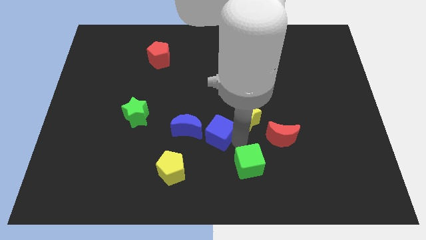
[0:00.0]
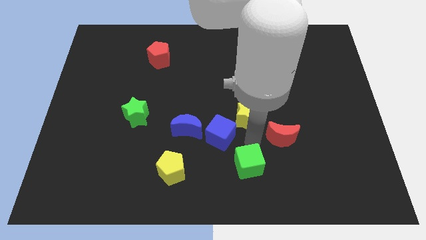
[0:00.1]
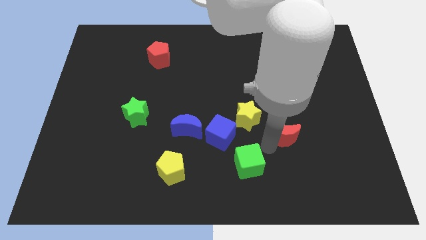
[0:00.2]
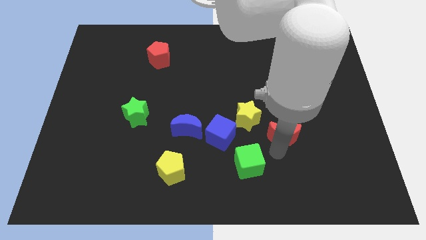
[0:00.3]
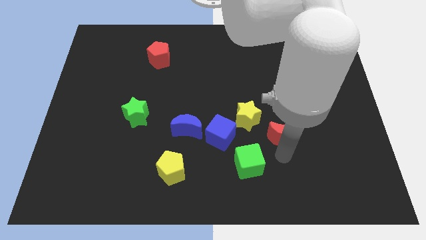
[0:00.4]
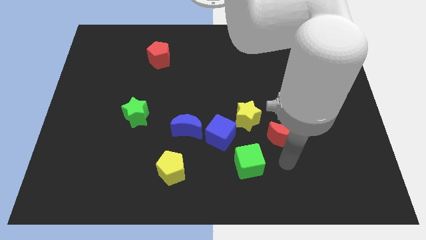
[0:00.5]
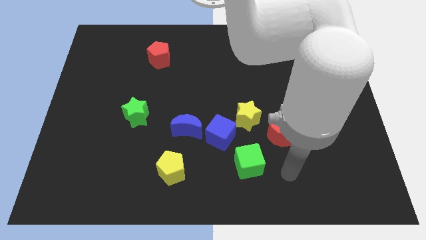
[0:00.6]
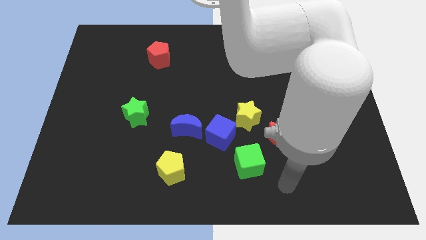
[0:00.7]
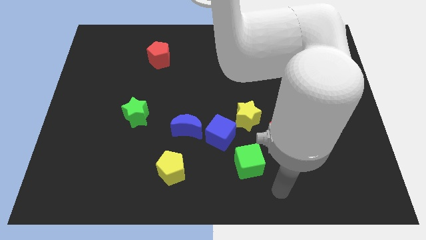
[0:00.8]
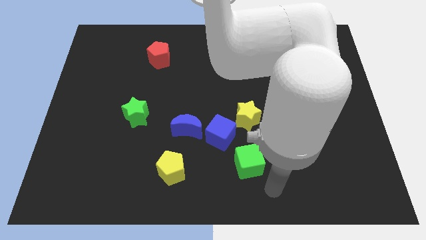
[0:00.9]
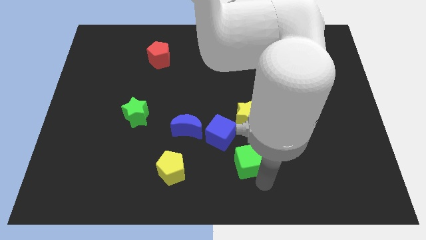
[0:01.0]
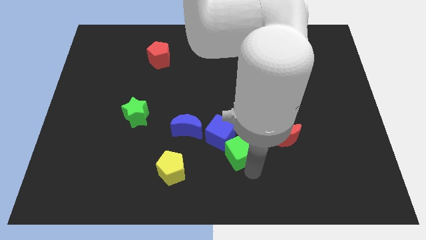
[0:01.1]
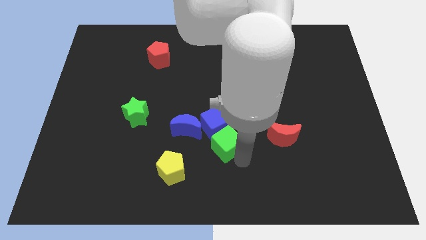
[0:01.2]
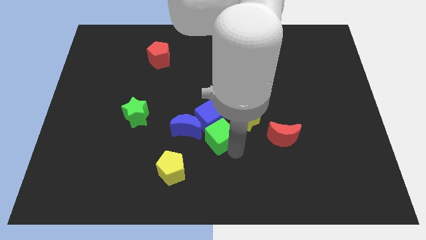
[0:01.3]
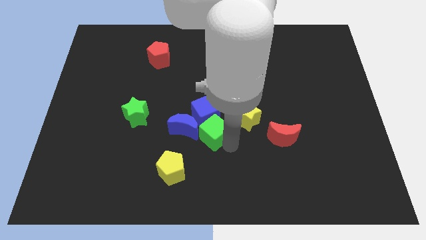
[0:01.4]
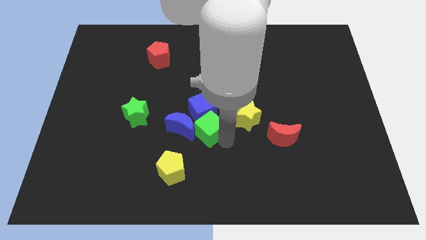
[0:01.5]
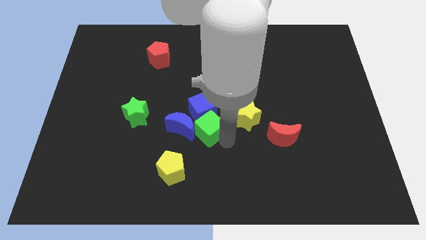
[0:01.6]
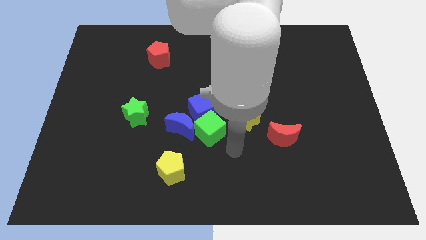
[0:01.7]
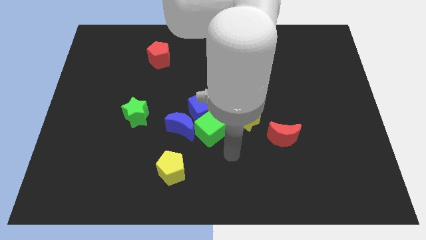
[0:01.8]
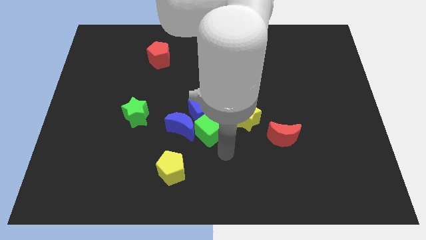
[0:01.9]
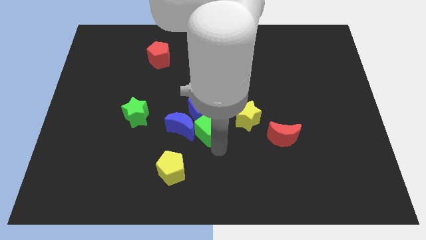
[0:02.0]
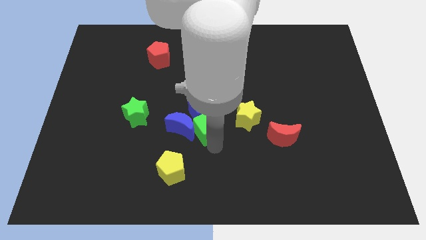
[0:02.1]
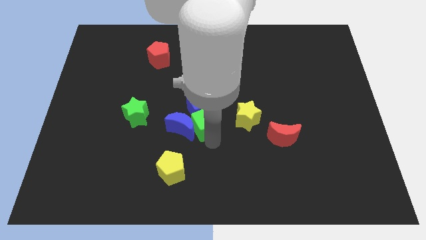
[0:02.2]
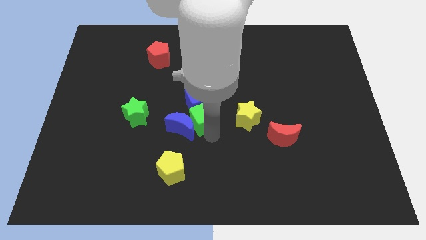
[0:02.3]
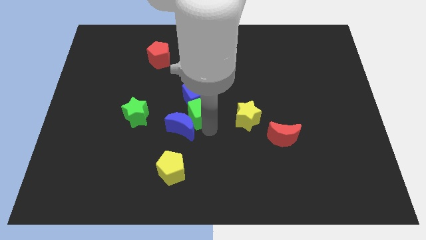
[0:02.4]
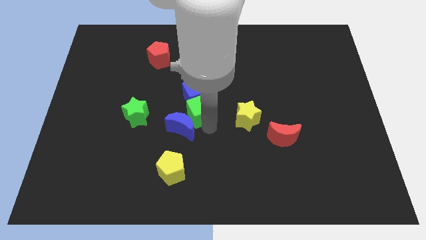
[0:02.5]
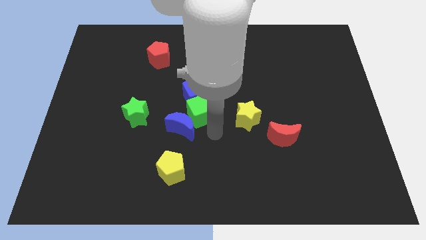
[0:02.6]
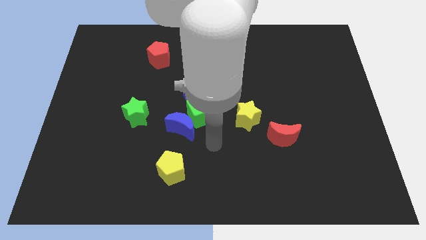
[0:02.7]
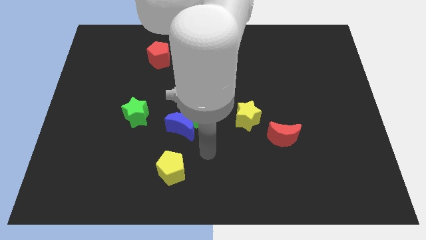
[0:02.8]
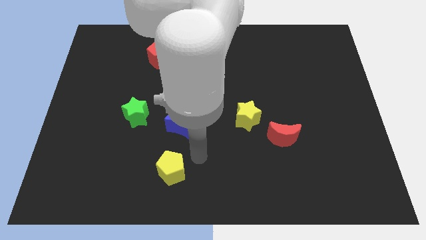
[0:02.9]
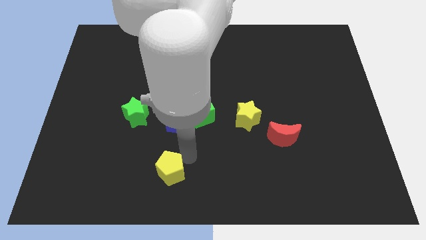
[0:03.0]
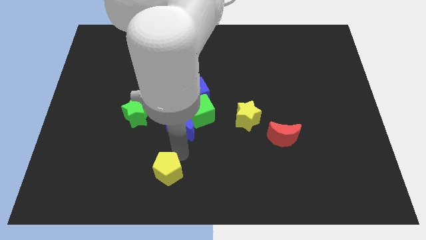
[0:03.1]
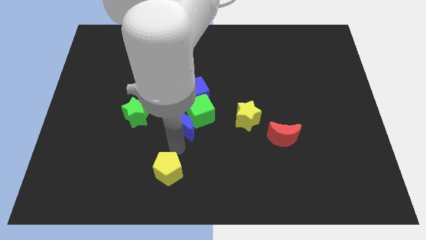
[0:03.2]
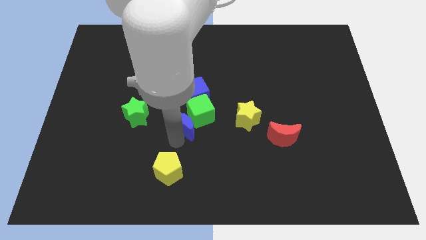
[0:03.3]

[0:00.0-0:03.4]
push the green cube into blue cube

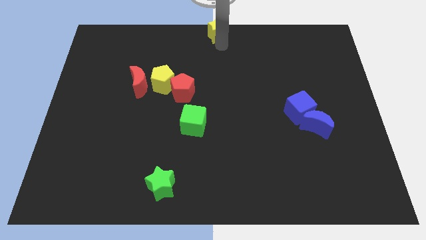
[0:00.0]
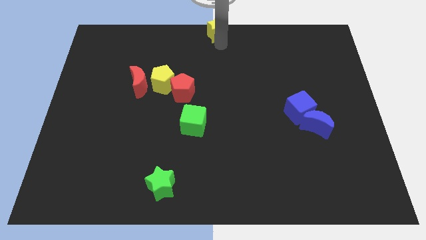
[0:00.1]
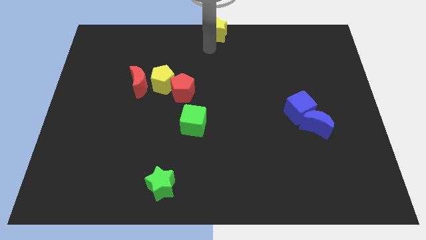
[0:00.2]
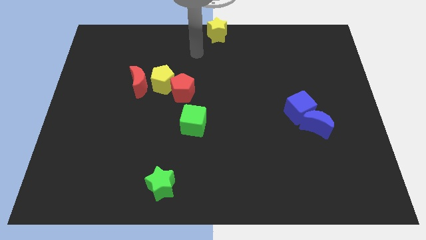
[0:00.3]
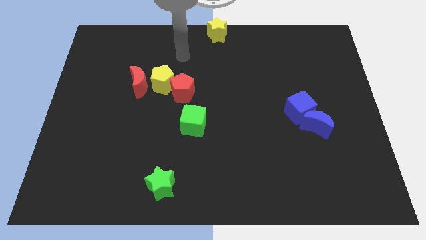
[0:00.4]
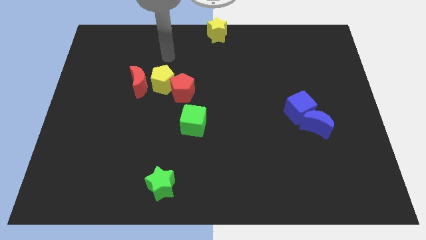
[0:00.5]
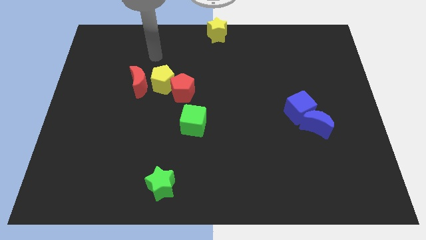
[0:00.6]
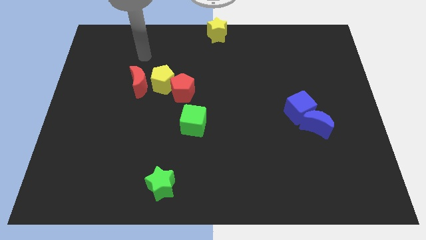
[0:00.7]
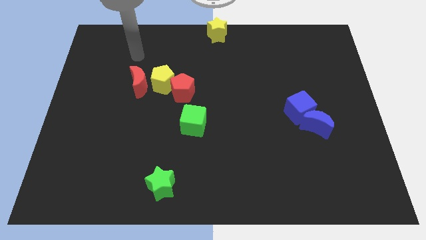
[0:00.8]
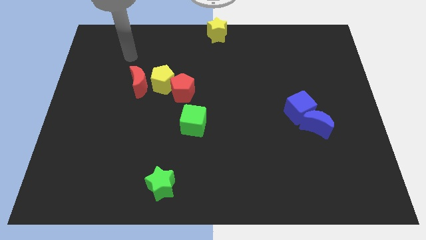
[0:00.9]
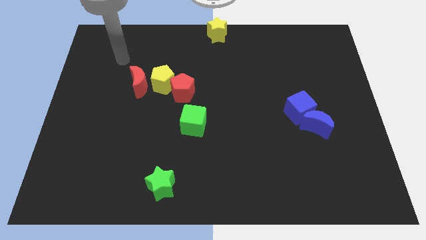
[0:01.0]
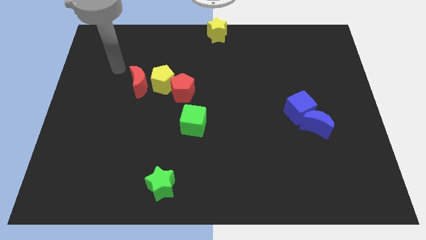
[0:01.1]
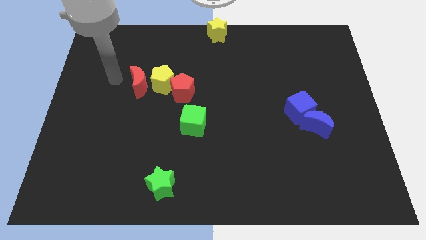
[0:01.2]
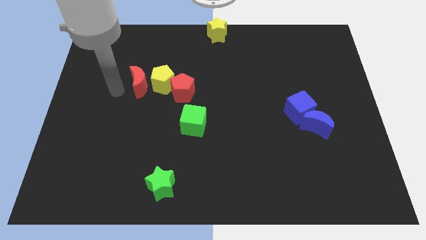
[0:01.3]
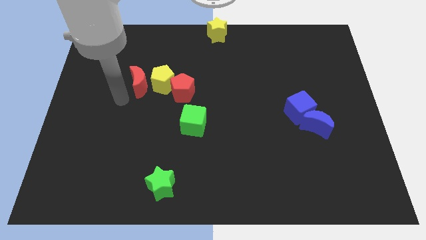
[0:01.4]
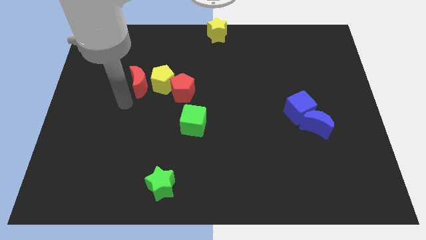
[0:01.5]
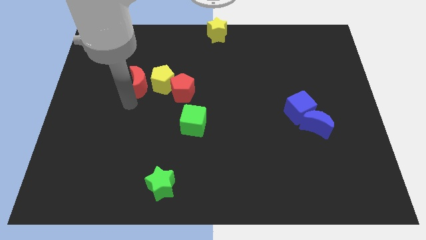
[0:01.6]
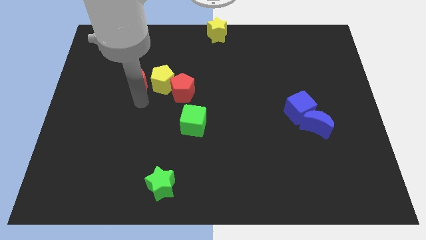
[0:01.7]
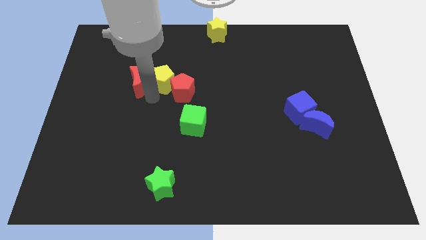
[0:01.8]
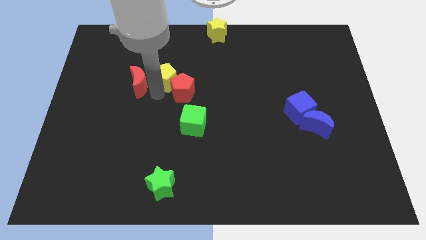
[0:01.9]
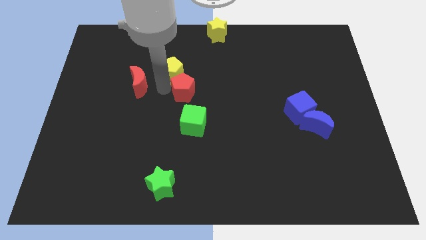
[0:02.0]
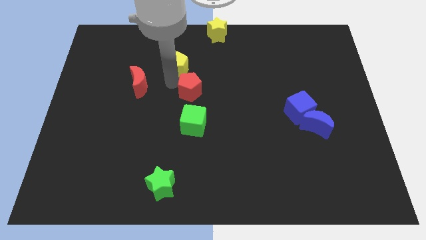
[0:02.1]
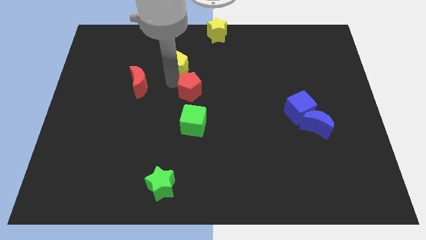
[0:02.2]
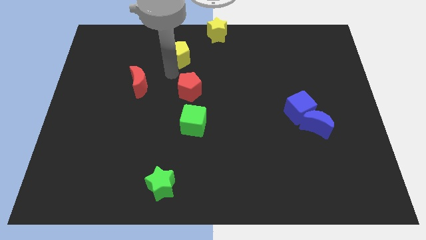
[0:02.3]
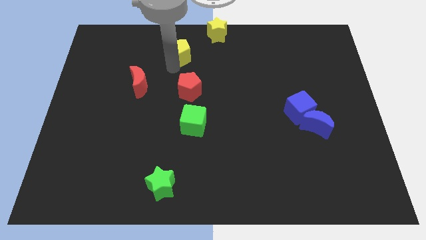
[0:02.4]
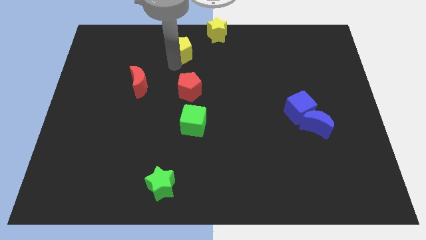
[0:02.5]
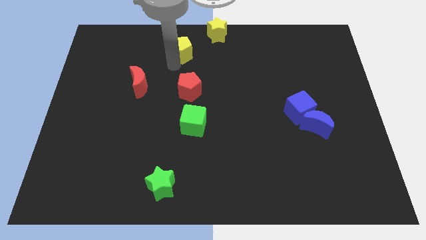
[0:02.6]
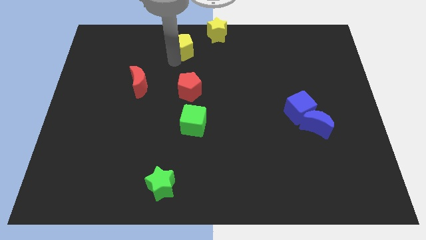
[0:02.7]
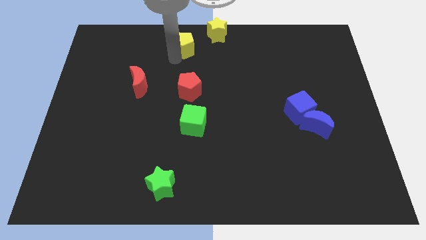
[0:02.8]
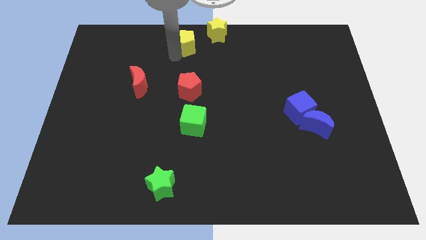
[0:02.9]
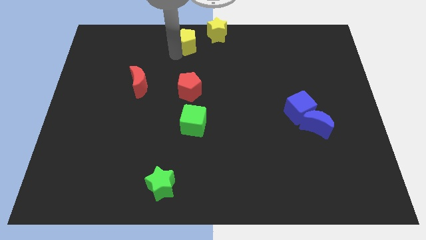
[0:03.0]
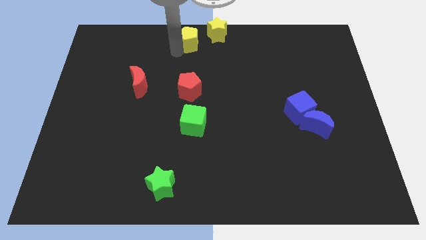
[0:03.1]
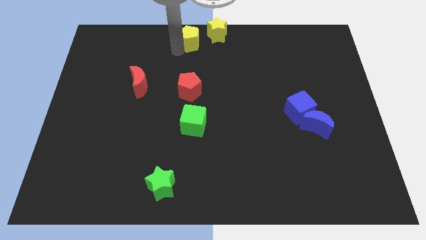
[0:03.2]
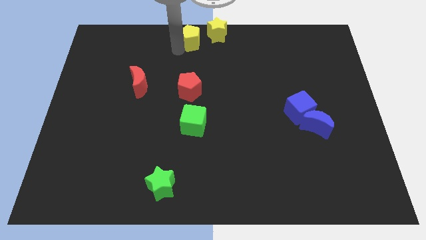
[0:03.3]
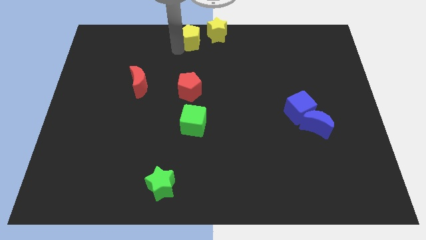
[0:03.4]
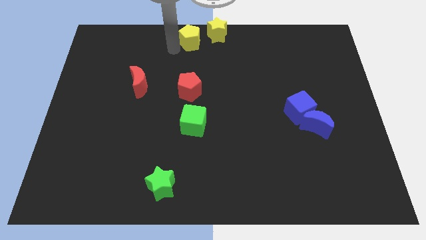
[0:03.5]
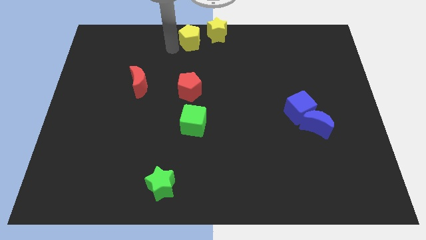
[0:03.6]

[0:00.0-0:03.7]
move the yellow pentagon above the red pentagon

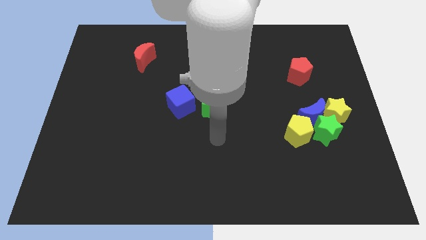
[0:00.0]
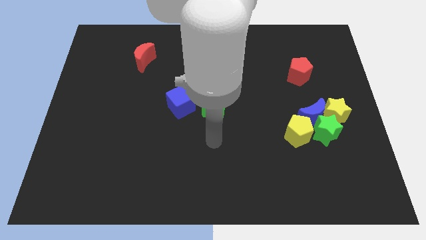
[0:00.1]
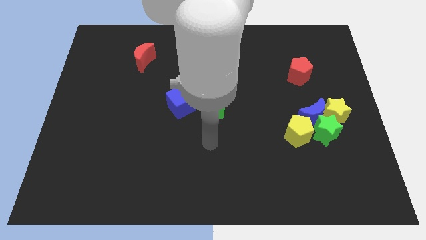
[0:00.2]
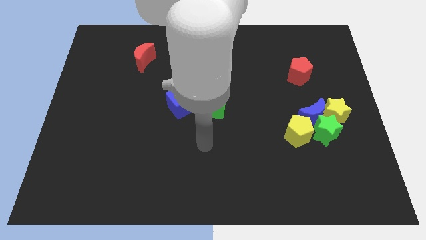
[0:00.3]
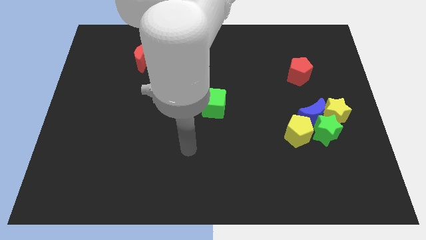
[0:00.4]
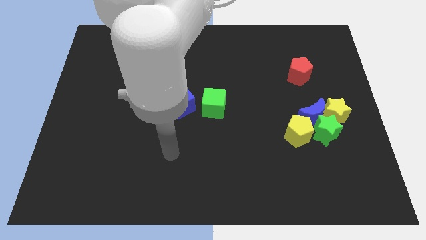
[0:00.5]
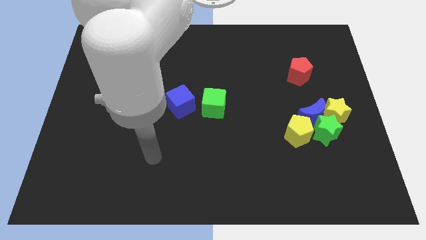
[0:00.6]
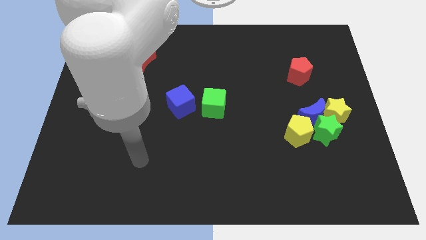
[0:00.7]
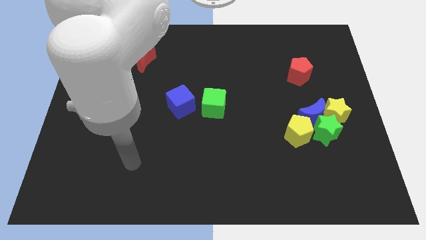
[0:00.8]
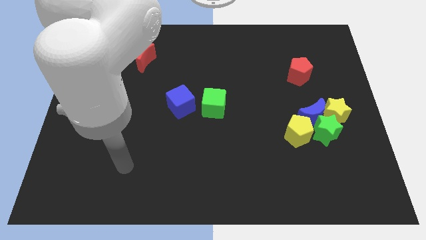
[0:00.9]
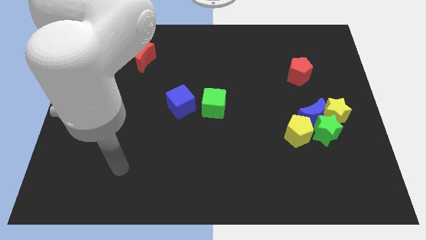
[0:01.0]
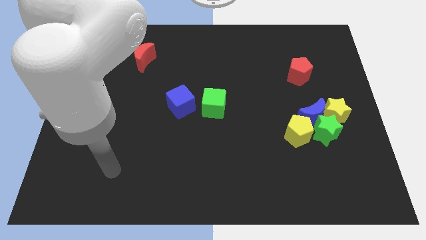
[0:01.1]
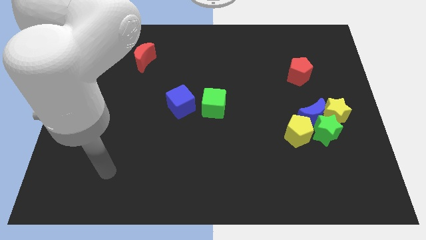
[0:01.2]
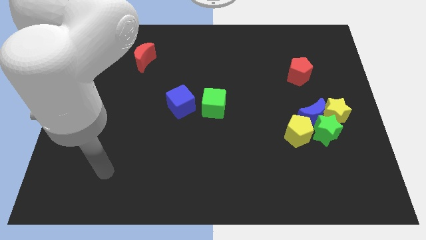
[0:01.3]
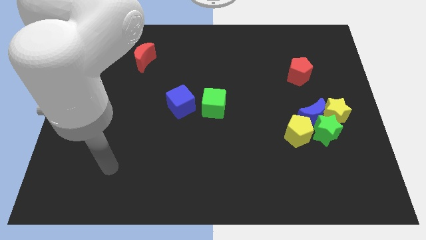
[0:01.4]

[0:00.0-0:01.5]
push your hand towards the bottom left

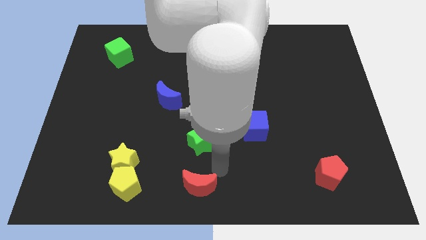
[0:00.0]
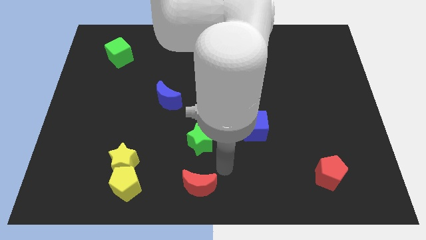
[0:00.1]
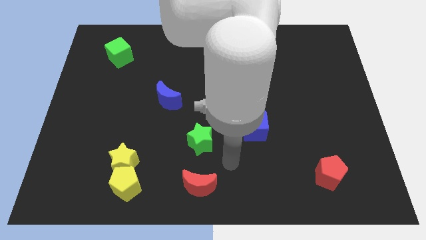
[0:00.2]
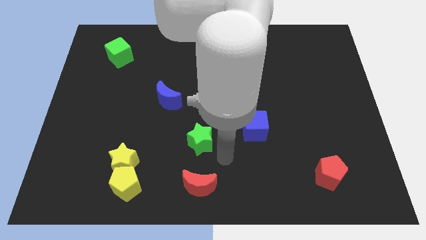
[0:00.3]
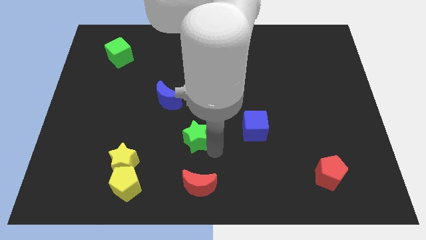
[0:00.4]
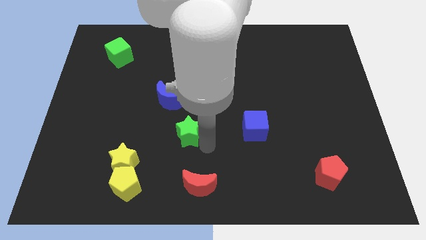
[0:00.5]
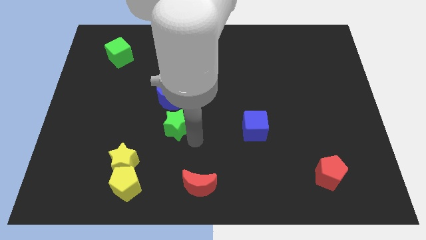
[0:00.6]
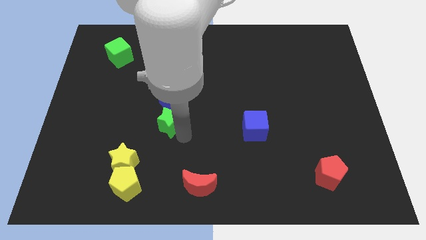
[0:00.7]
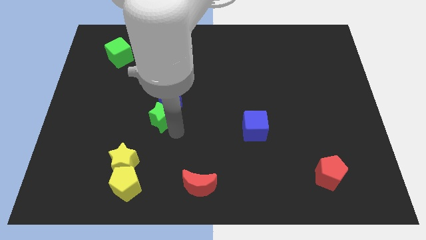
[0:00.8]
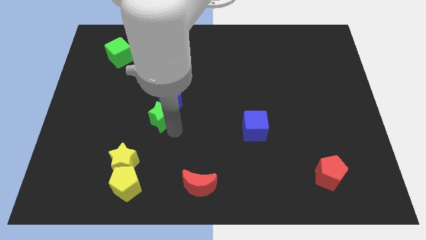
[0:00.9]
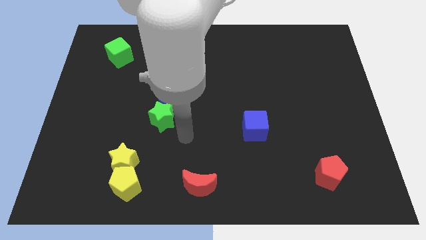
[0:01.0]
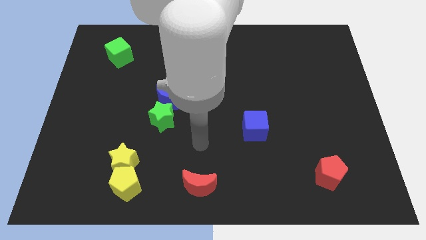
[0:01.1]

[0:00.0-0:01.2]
put the green star below the blue moon
